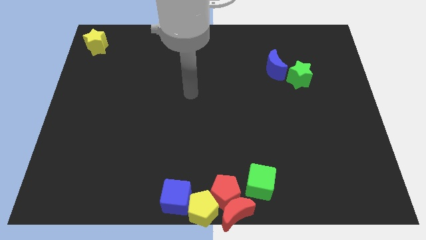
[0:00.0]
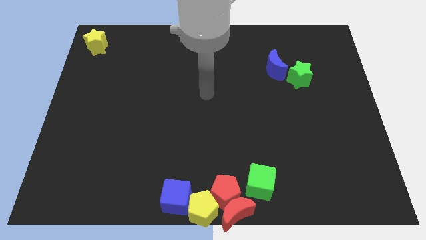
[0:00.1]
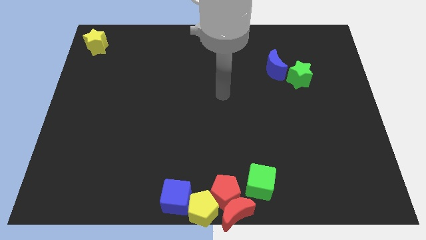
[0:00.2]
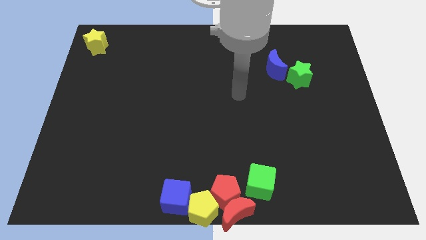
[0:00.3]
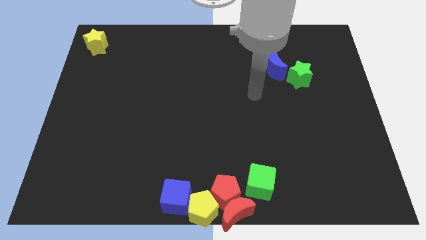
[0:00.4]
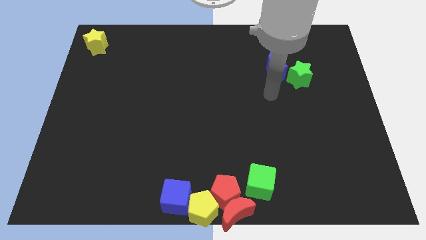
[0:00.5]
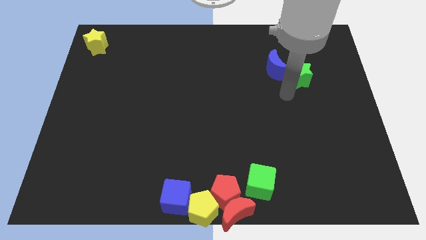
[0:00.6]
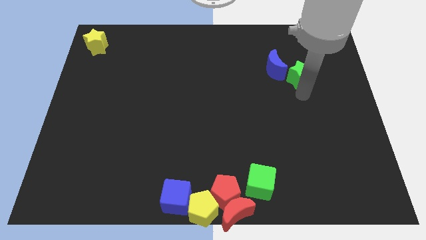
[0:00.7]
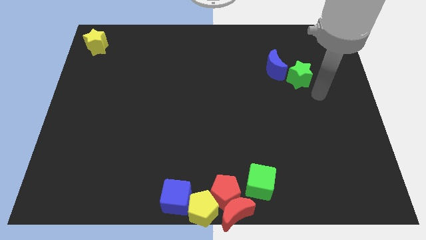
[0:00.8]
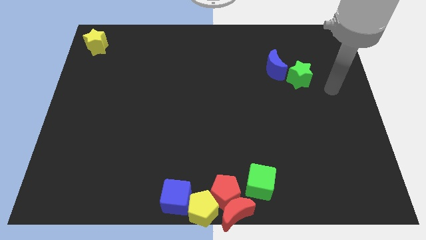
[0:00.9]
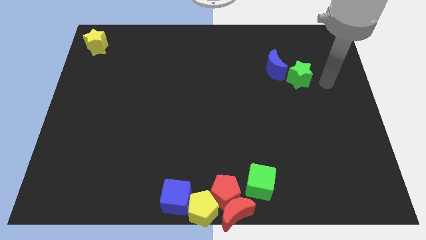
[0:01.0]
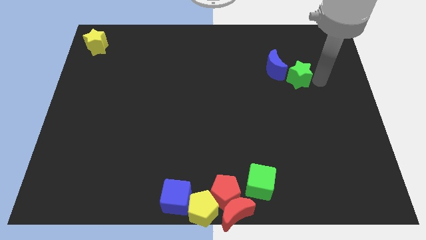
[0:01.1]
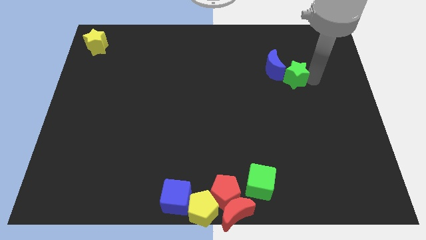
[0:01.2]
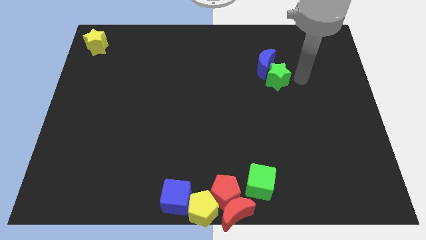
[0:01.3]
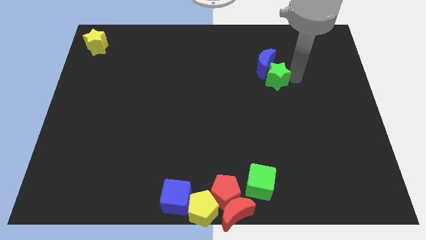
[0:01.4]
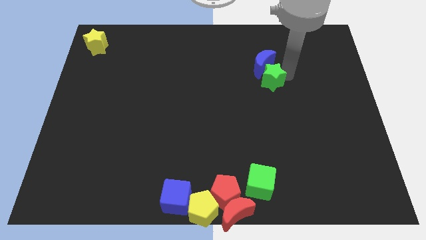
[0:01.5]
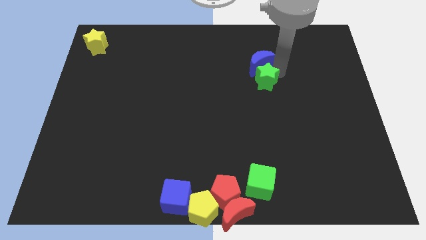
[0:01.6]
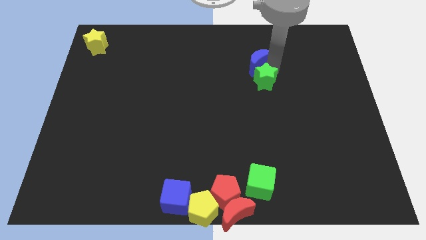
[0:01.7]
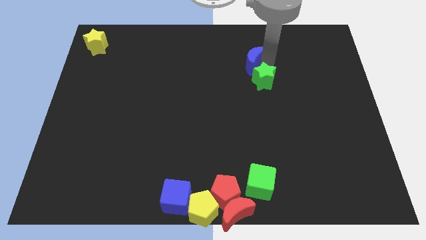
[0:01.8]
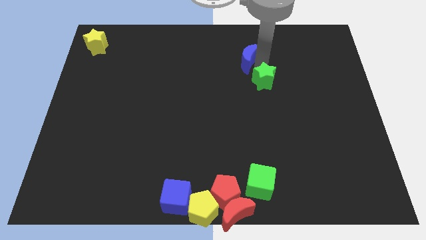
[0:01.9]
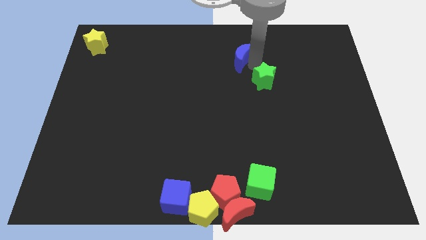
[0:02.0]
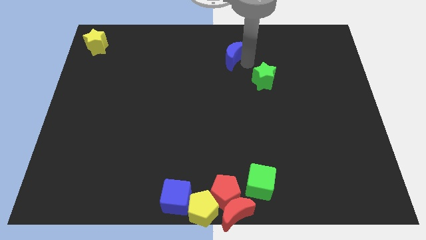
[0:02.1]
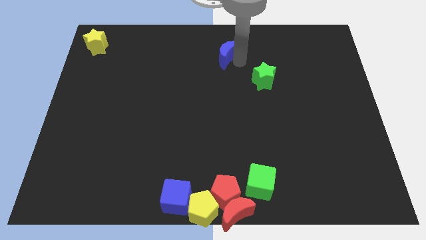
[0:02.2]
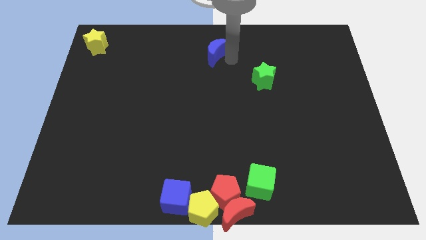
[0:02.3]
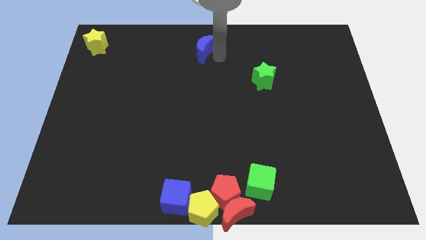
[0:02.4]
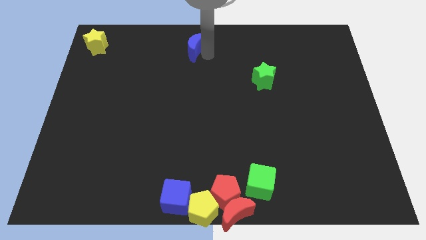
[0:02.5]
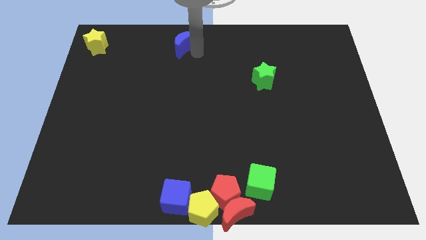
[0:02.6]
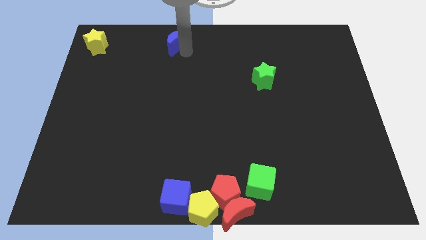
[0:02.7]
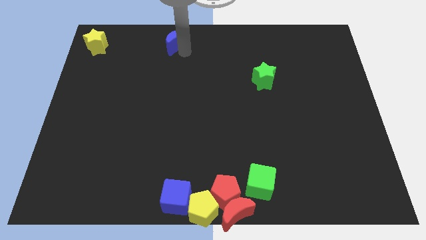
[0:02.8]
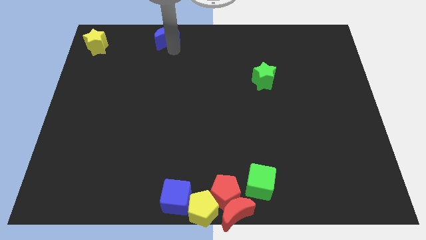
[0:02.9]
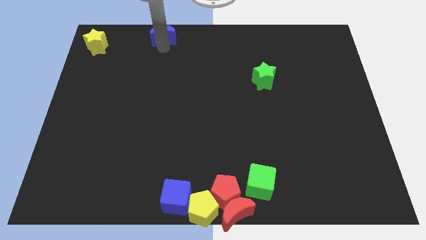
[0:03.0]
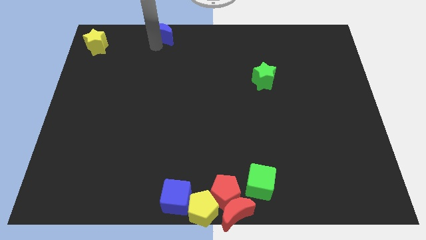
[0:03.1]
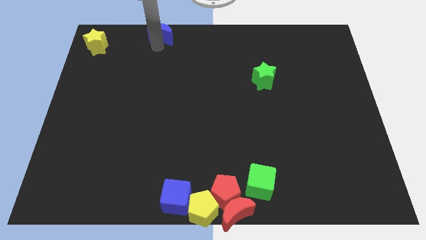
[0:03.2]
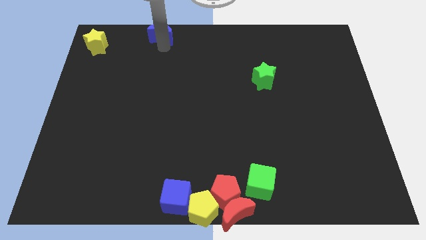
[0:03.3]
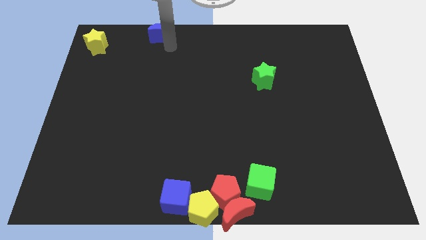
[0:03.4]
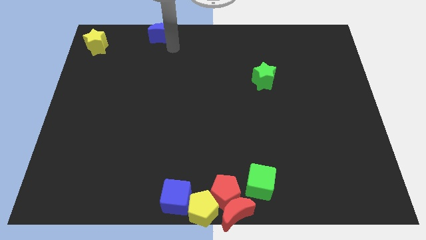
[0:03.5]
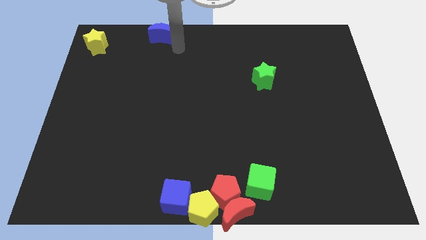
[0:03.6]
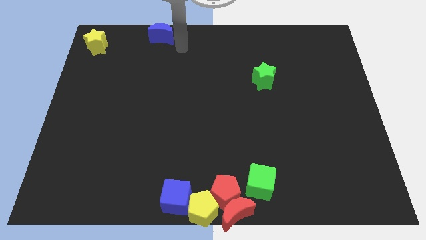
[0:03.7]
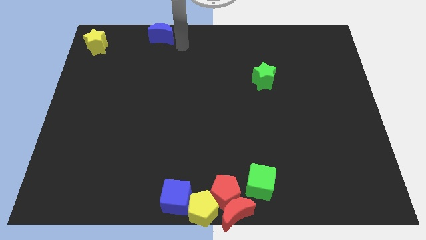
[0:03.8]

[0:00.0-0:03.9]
separate blue moon from the green star

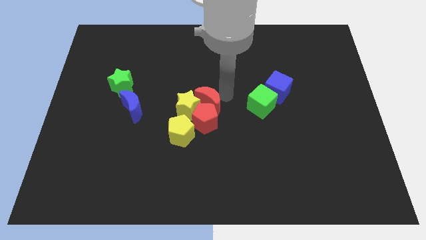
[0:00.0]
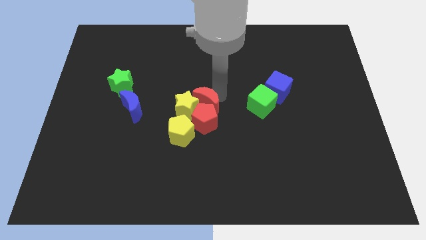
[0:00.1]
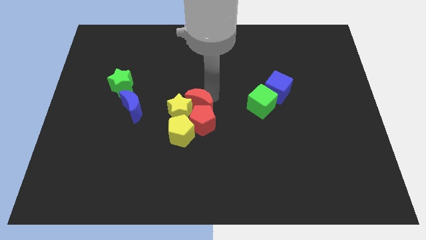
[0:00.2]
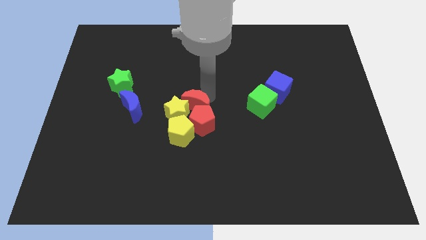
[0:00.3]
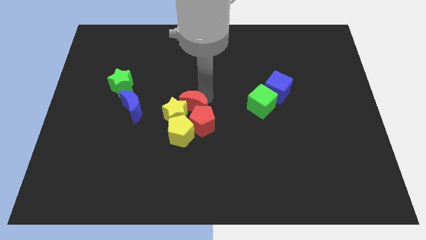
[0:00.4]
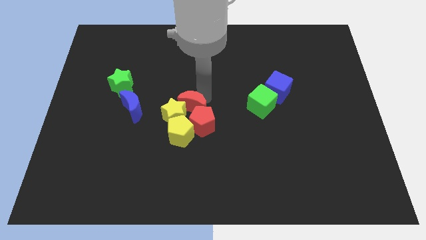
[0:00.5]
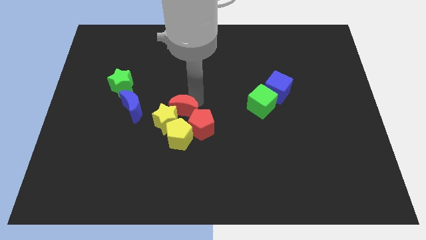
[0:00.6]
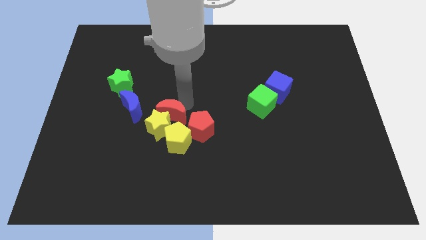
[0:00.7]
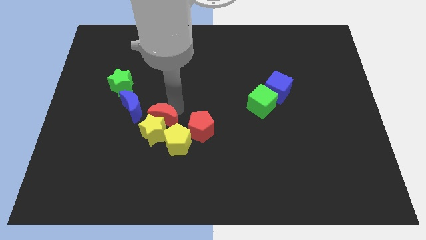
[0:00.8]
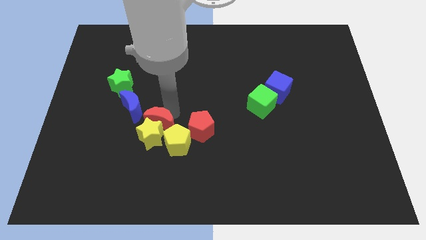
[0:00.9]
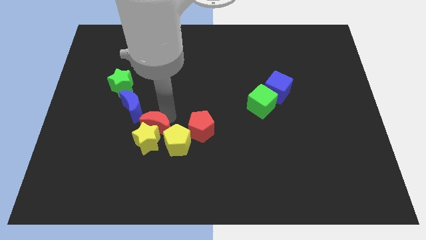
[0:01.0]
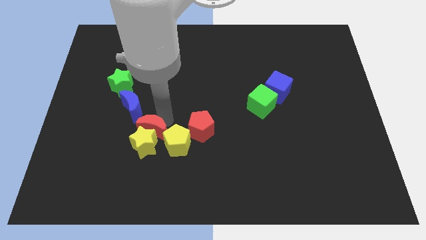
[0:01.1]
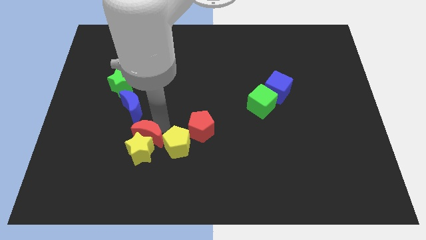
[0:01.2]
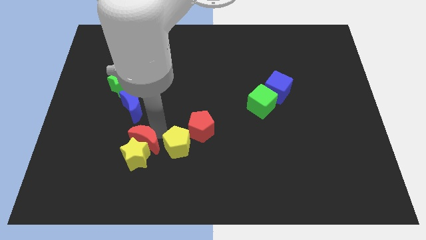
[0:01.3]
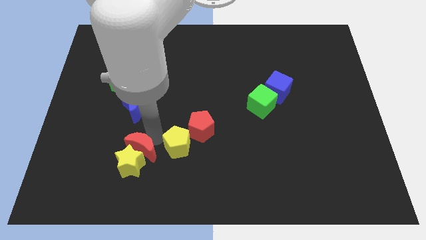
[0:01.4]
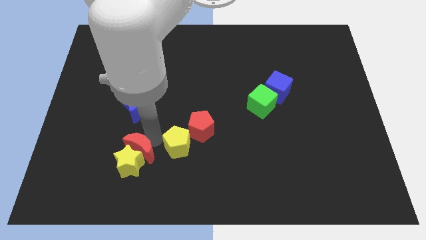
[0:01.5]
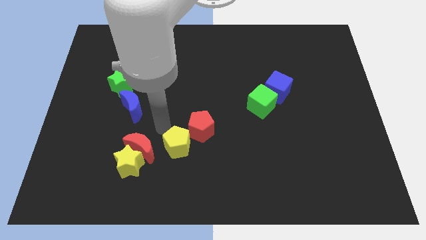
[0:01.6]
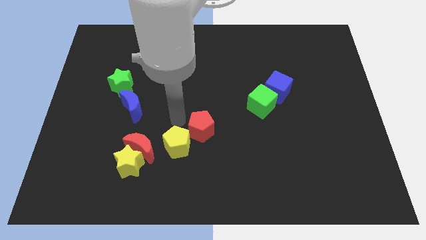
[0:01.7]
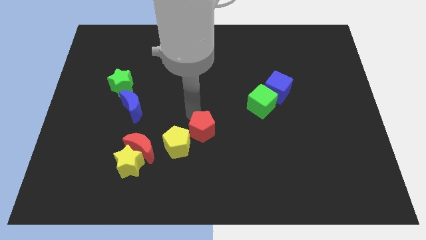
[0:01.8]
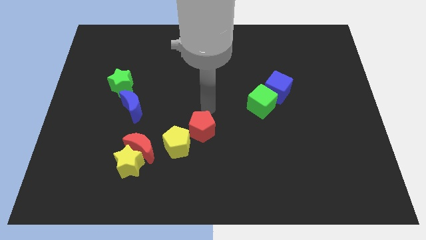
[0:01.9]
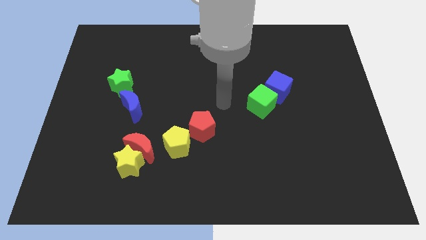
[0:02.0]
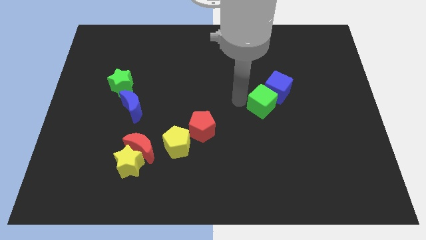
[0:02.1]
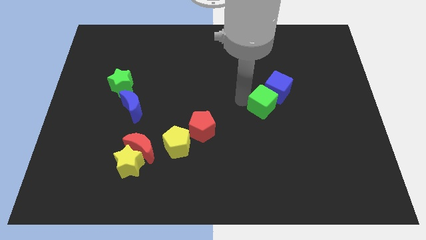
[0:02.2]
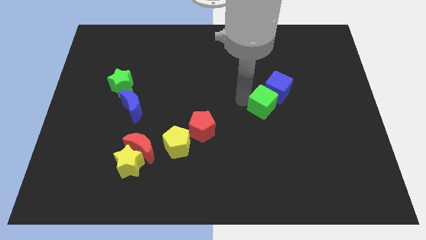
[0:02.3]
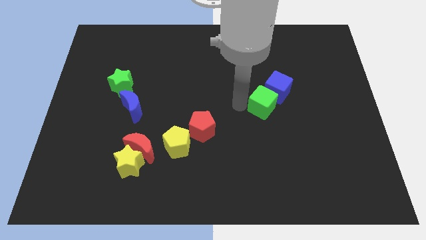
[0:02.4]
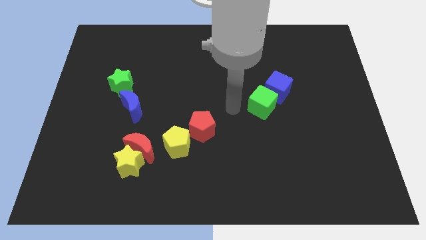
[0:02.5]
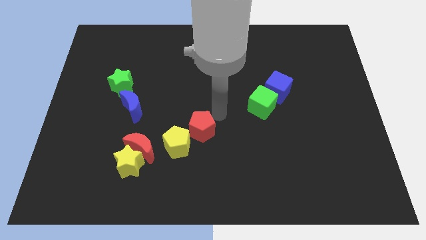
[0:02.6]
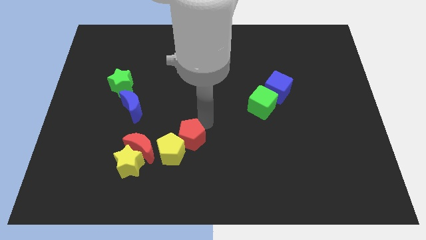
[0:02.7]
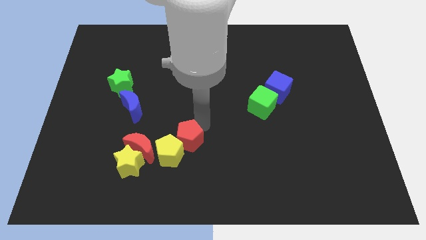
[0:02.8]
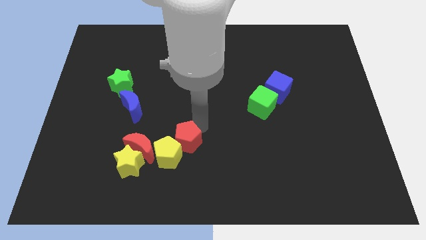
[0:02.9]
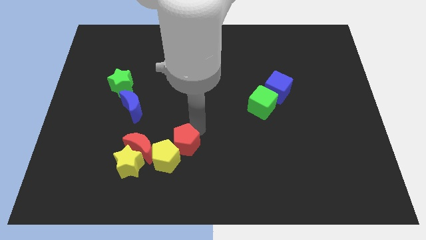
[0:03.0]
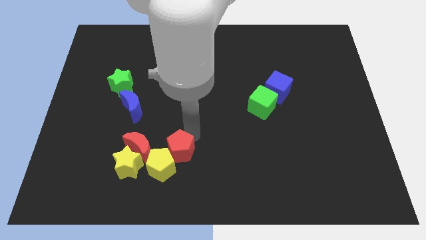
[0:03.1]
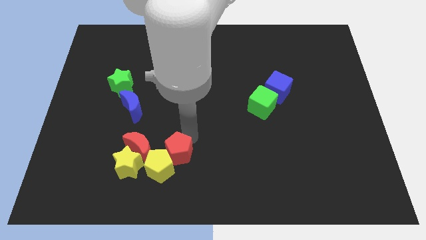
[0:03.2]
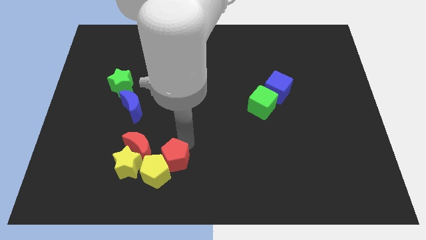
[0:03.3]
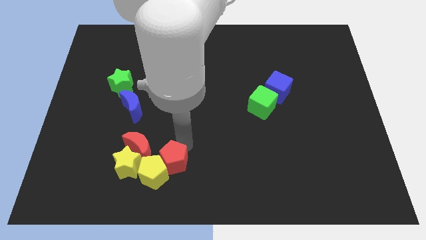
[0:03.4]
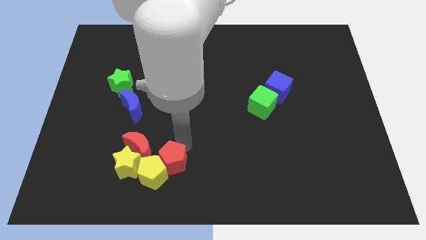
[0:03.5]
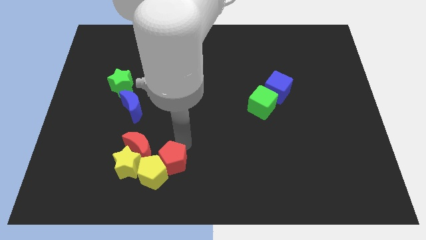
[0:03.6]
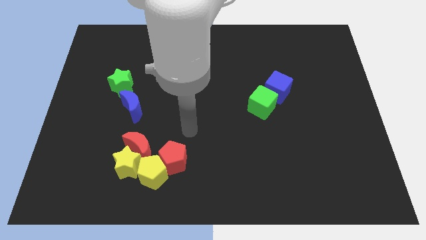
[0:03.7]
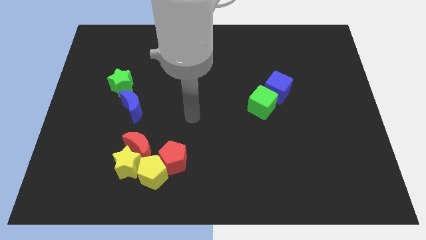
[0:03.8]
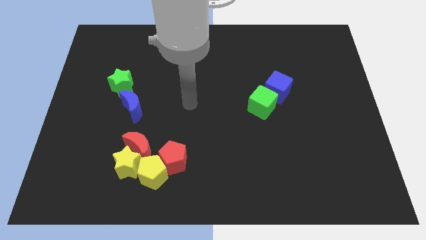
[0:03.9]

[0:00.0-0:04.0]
move the red and yellow blocks towards the bottom left side of the board

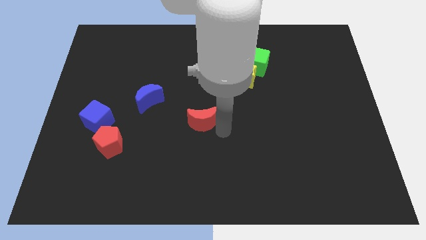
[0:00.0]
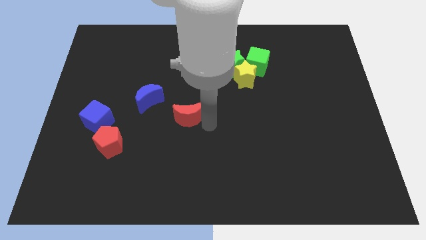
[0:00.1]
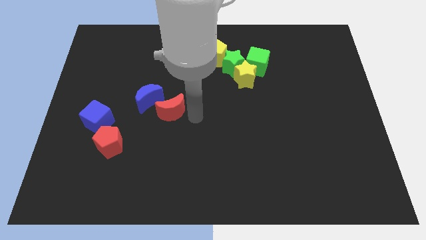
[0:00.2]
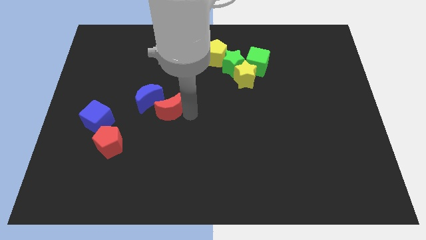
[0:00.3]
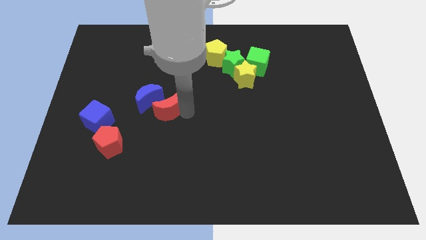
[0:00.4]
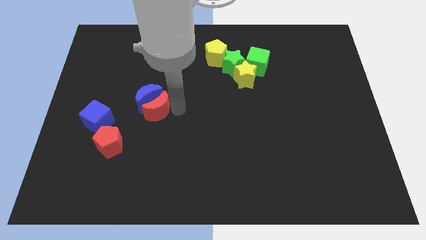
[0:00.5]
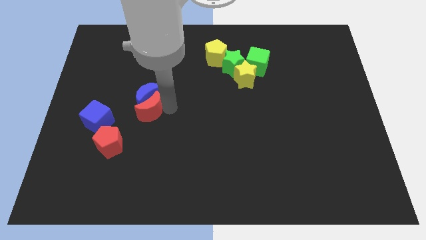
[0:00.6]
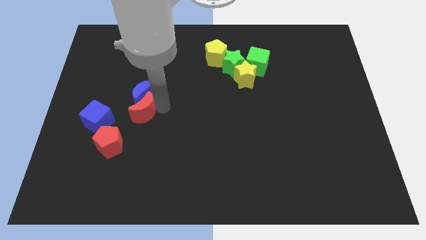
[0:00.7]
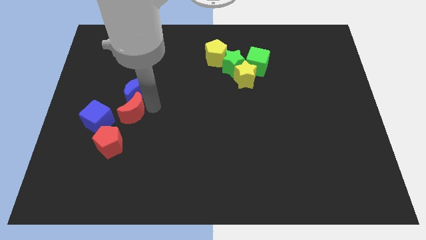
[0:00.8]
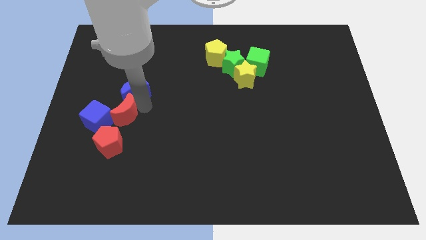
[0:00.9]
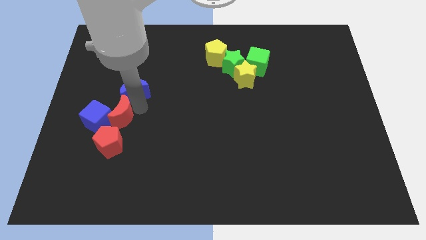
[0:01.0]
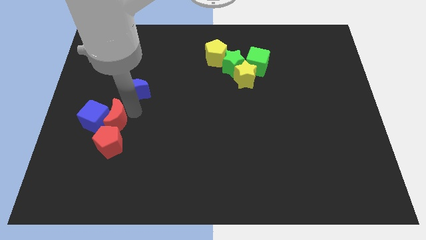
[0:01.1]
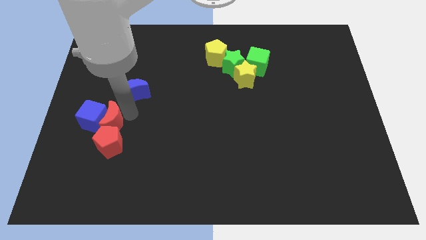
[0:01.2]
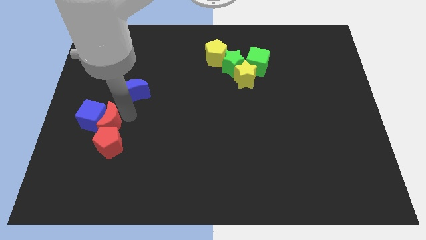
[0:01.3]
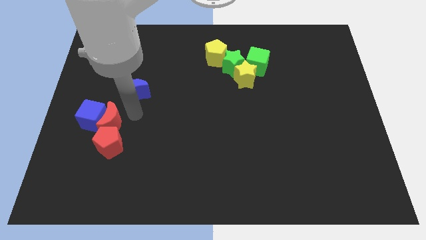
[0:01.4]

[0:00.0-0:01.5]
push the red crescent into the blue cube
